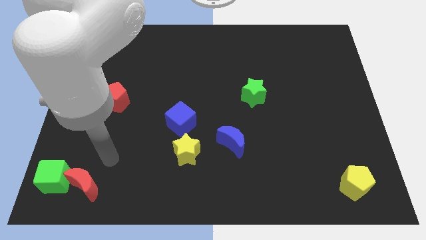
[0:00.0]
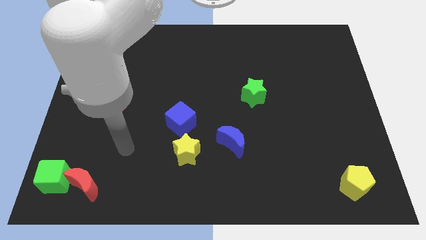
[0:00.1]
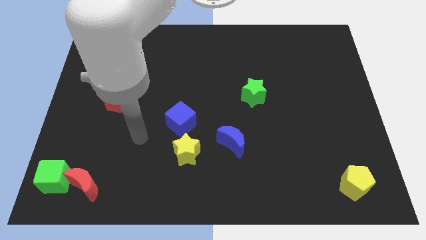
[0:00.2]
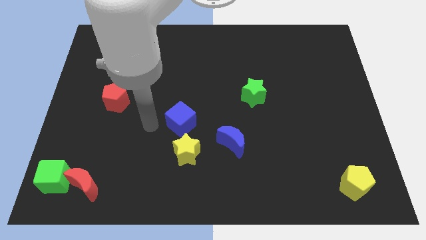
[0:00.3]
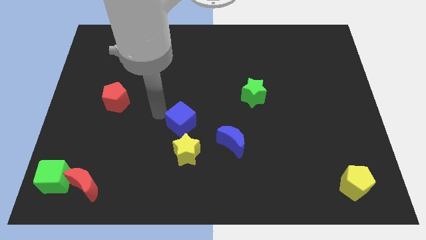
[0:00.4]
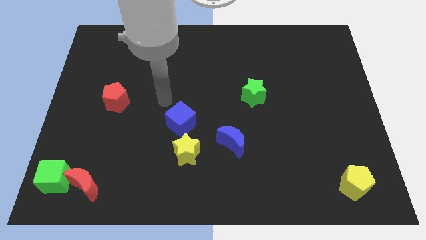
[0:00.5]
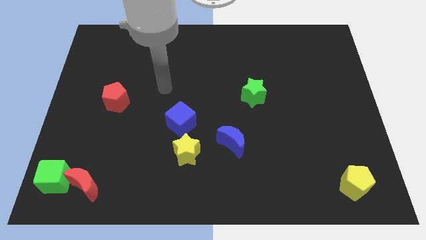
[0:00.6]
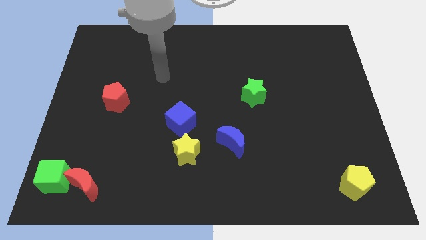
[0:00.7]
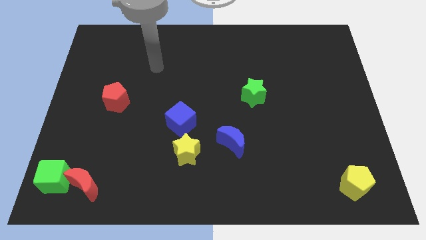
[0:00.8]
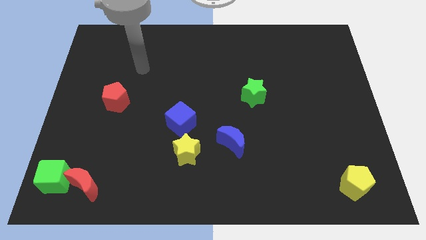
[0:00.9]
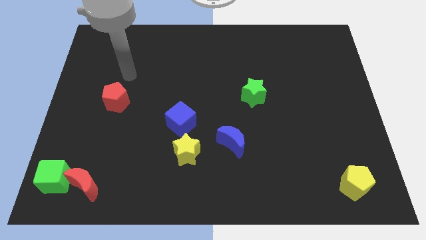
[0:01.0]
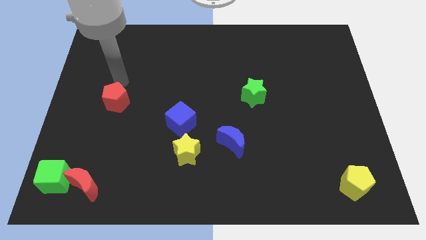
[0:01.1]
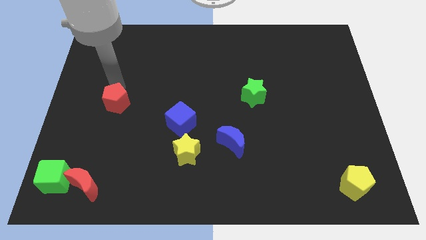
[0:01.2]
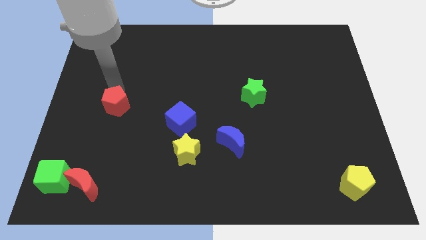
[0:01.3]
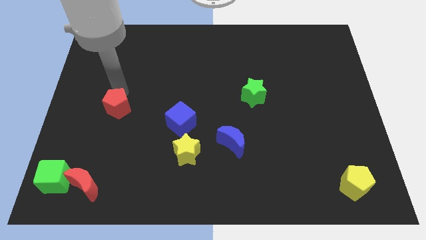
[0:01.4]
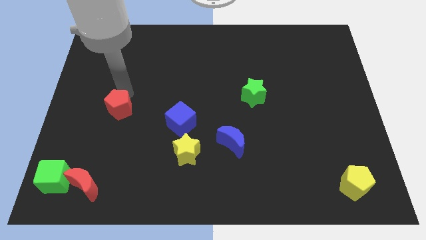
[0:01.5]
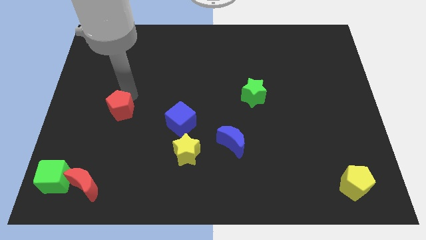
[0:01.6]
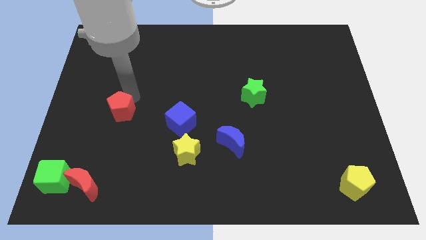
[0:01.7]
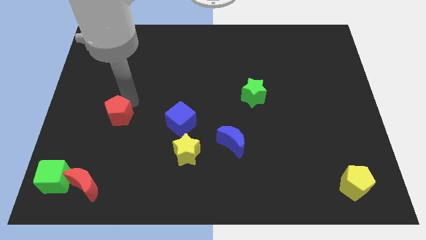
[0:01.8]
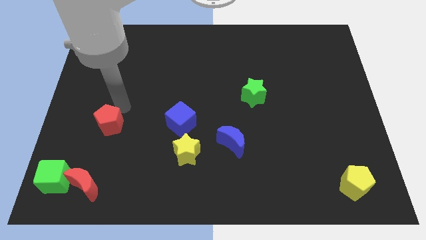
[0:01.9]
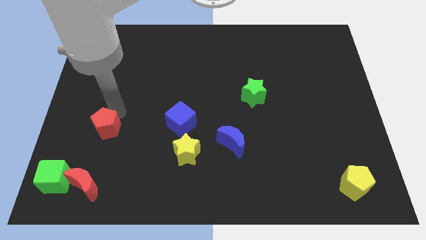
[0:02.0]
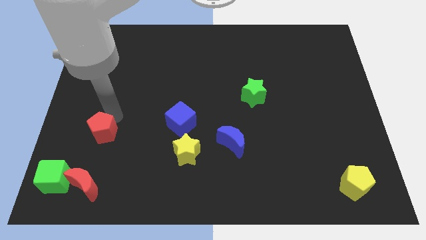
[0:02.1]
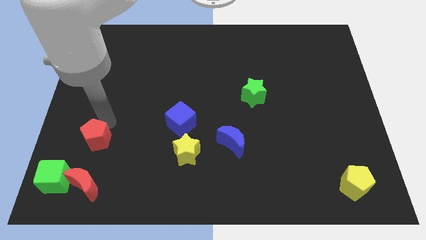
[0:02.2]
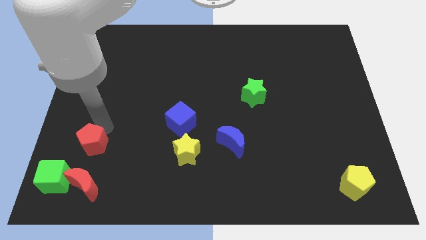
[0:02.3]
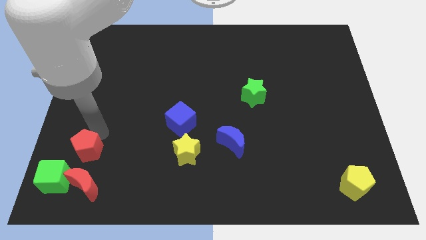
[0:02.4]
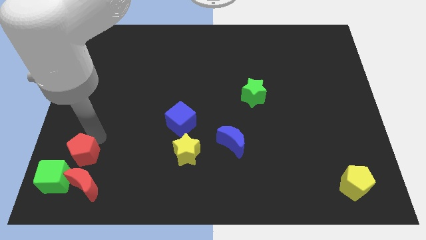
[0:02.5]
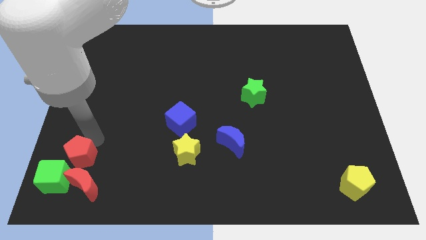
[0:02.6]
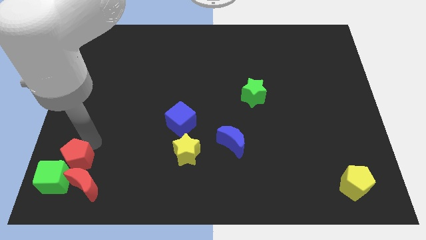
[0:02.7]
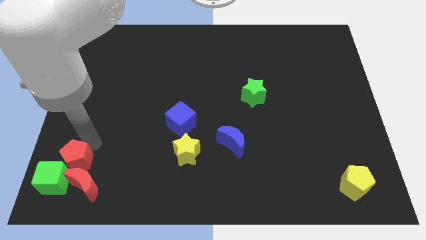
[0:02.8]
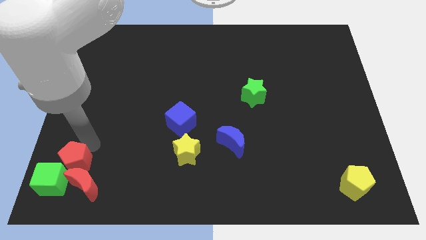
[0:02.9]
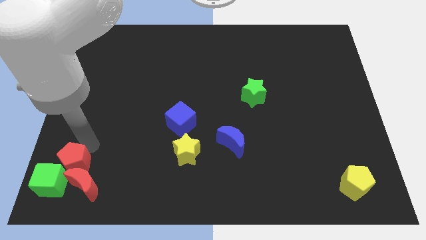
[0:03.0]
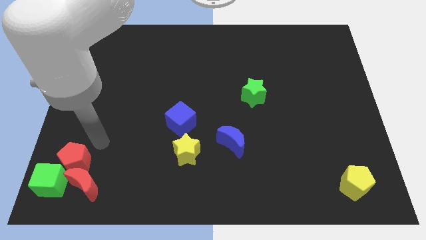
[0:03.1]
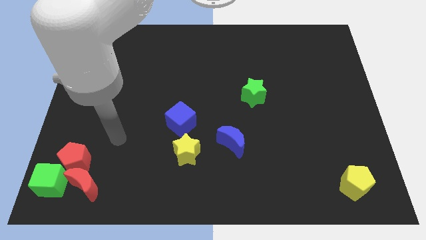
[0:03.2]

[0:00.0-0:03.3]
push the red pentagon into the green cube

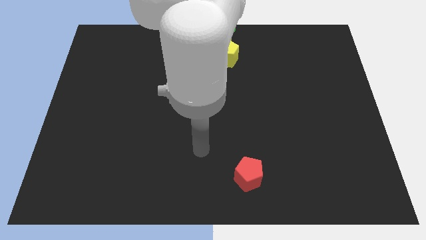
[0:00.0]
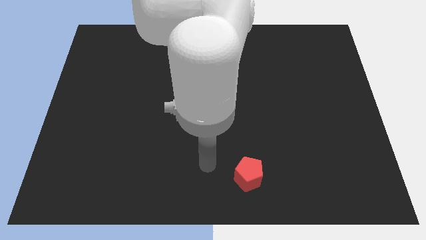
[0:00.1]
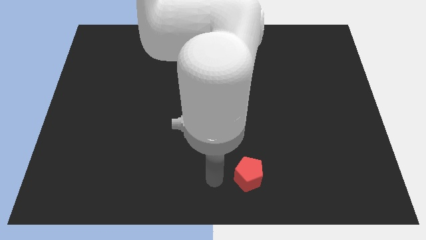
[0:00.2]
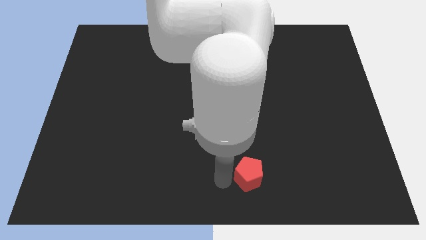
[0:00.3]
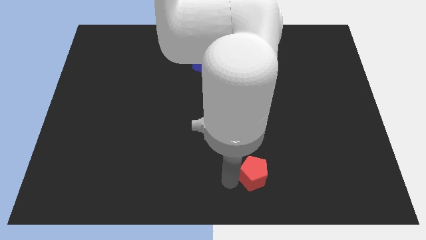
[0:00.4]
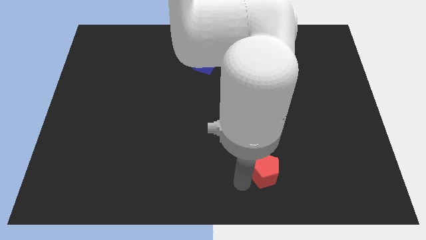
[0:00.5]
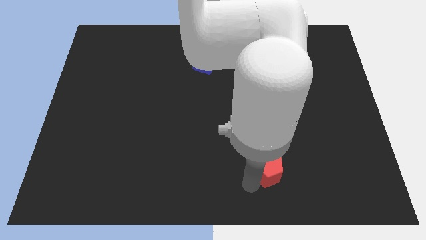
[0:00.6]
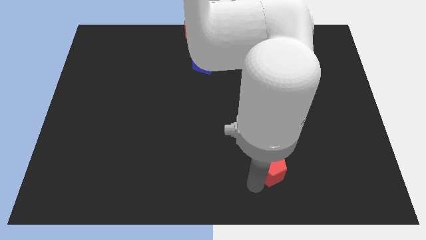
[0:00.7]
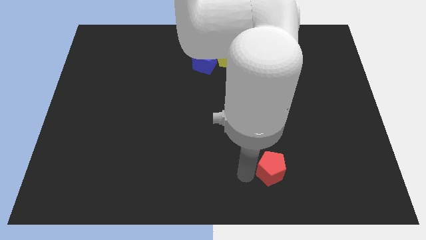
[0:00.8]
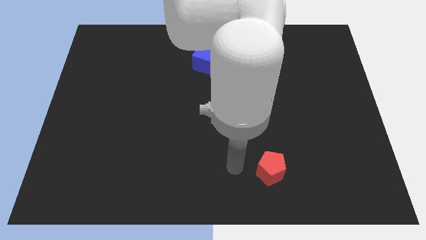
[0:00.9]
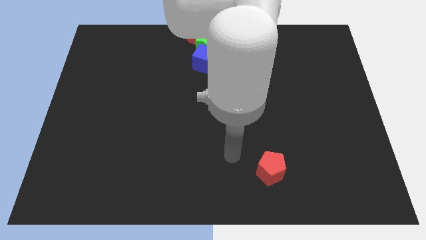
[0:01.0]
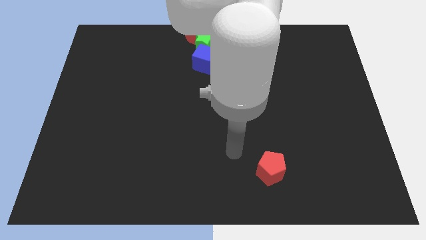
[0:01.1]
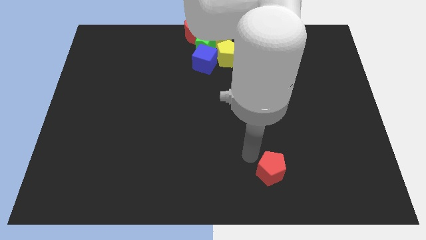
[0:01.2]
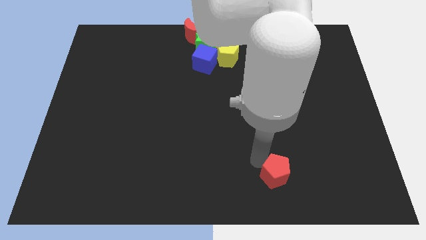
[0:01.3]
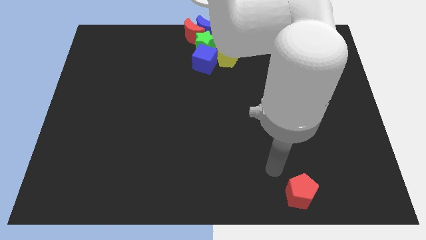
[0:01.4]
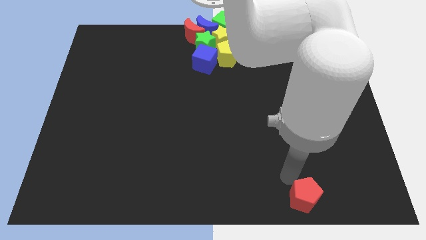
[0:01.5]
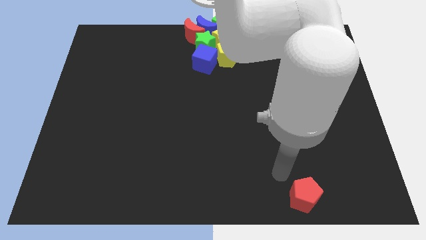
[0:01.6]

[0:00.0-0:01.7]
push the red pentagon to the bottom right of the board

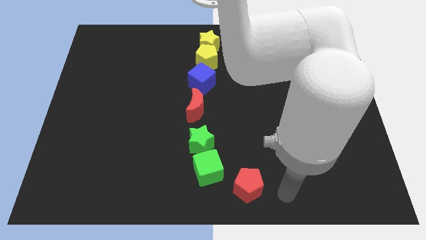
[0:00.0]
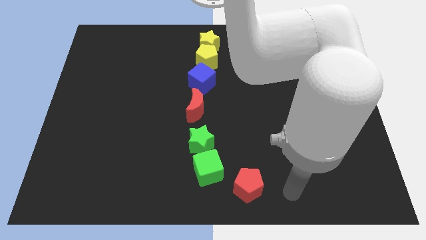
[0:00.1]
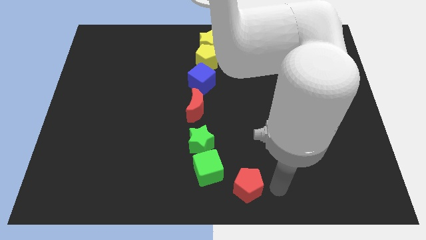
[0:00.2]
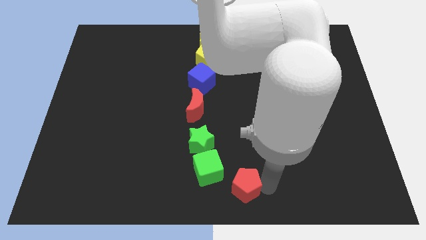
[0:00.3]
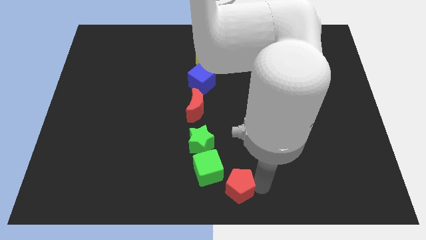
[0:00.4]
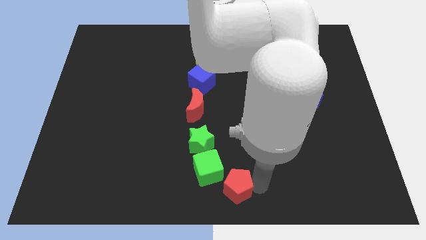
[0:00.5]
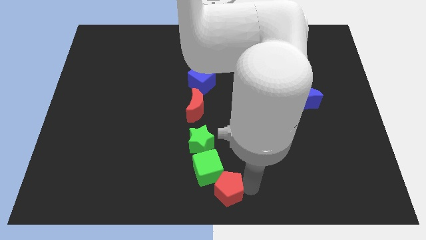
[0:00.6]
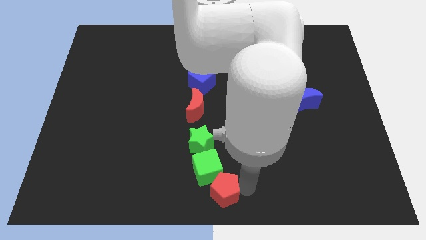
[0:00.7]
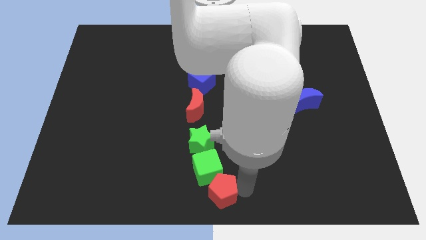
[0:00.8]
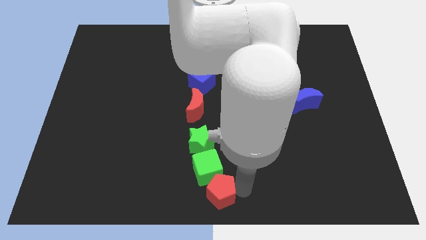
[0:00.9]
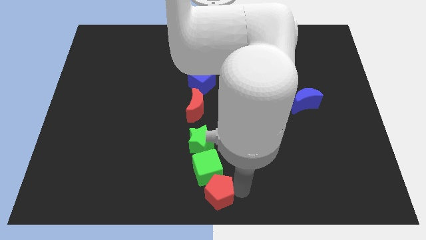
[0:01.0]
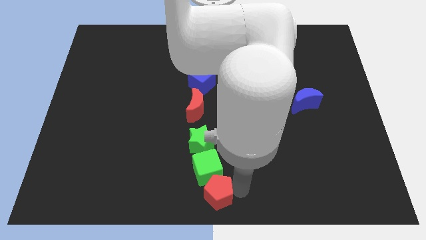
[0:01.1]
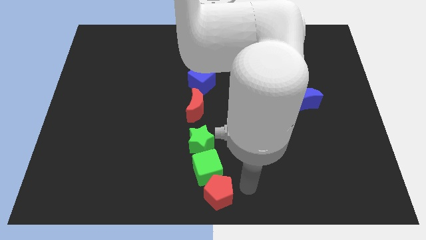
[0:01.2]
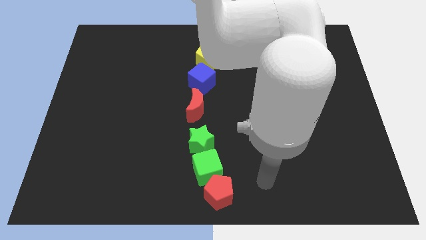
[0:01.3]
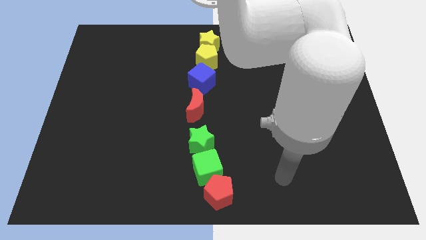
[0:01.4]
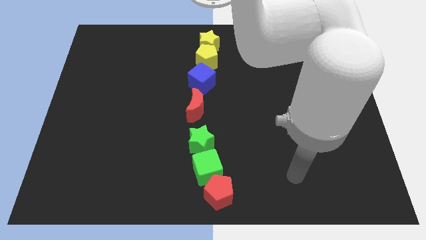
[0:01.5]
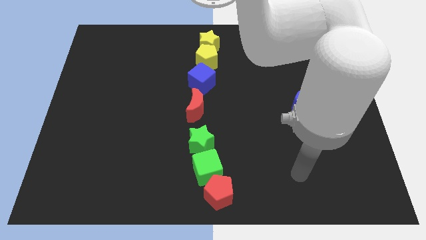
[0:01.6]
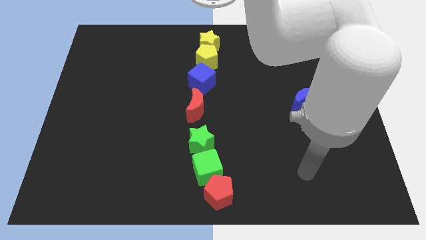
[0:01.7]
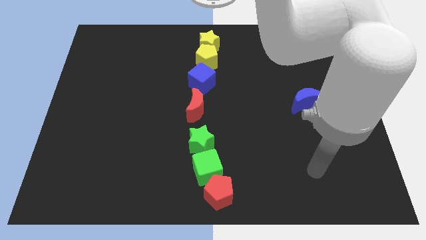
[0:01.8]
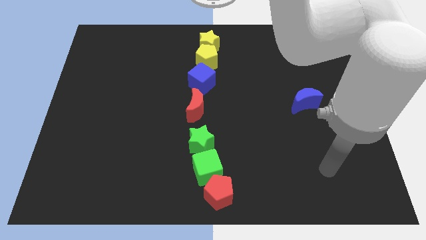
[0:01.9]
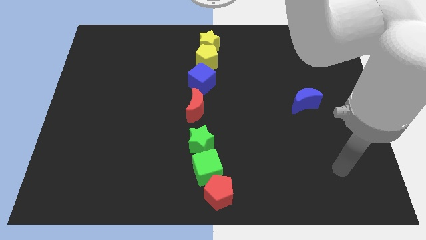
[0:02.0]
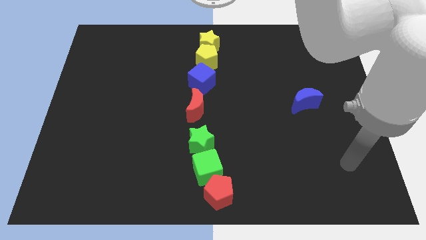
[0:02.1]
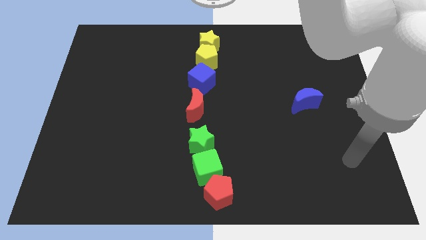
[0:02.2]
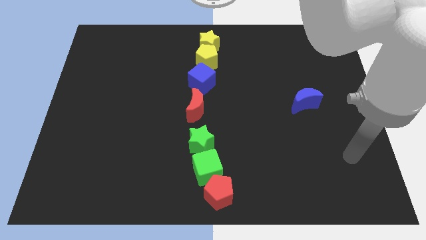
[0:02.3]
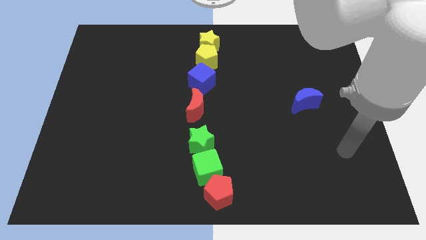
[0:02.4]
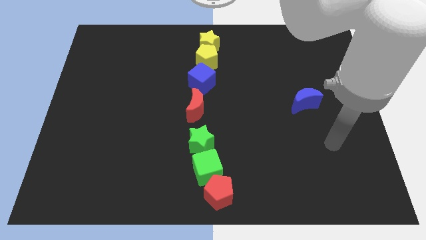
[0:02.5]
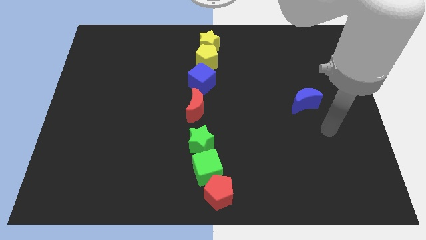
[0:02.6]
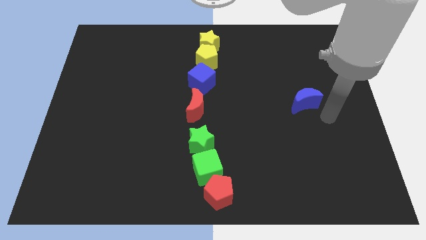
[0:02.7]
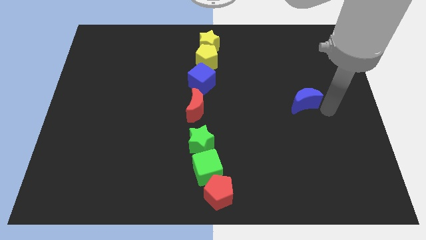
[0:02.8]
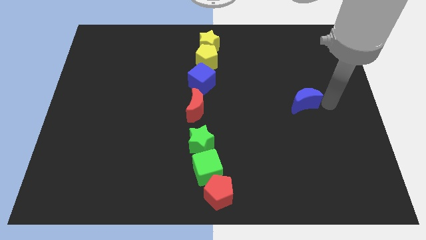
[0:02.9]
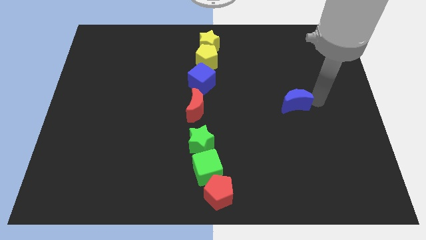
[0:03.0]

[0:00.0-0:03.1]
place the red pentagon vertically below the green cube

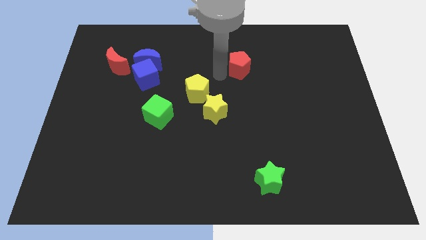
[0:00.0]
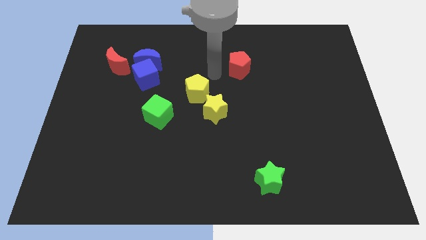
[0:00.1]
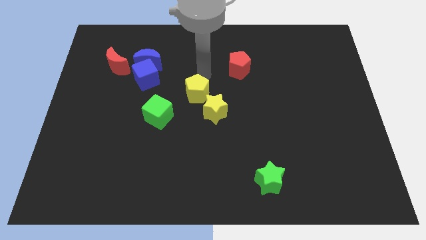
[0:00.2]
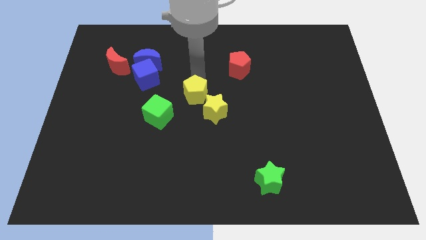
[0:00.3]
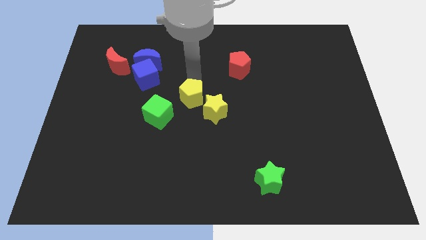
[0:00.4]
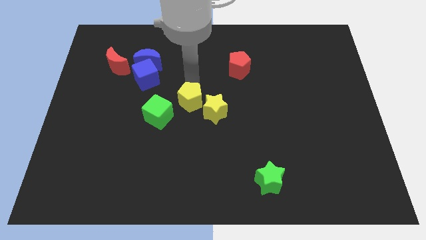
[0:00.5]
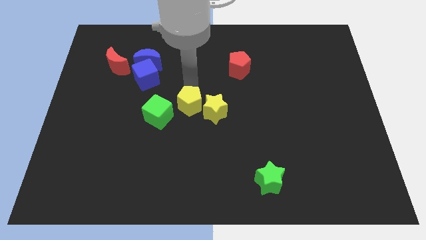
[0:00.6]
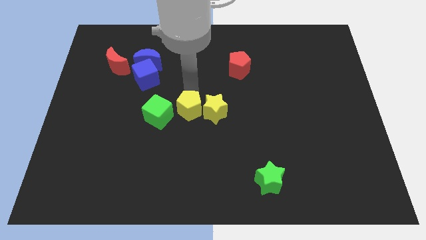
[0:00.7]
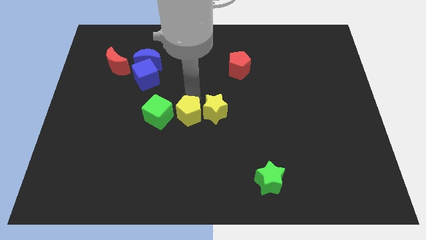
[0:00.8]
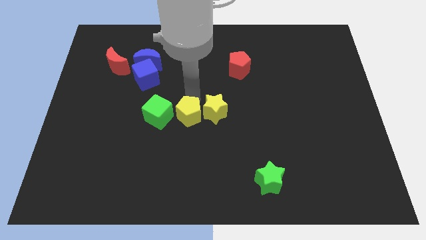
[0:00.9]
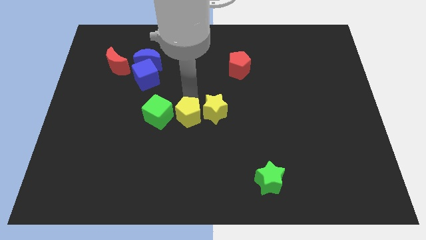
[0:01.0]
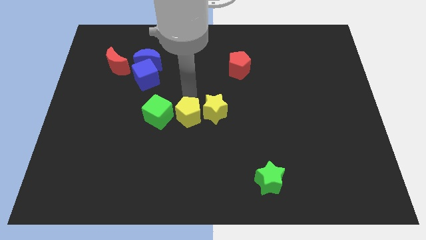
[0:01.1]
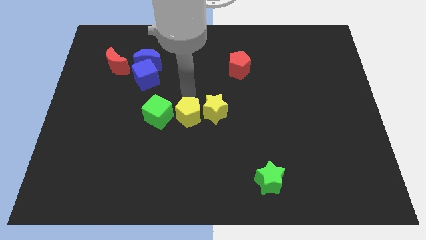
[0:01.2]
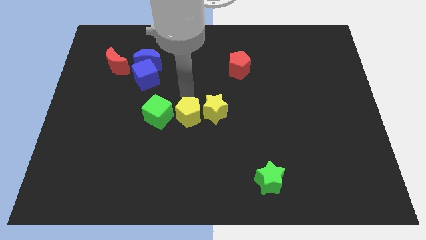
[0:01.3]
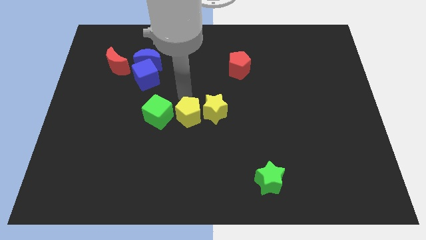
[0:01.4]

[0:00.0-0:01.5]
place the yellow pentagon in between the yellow star and the green cube
